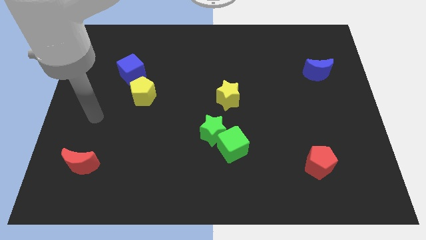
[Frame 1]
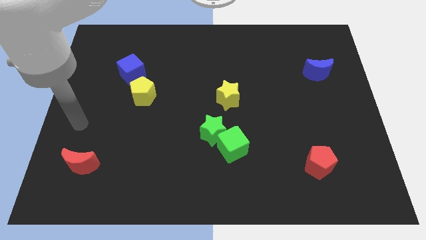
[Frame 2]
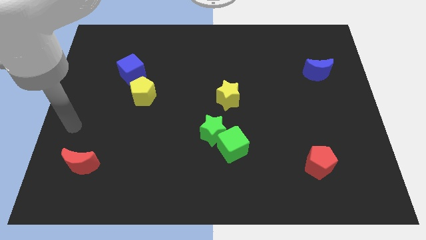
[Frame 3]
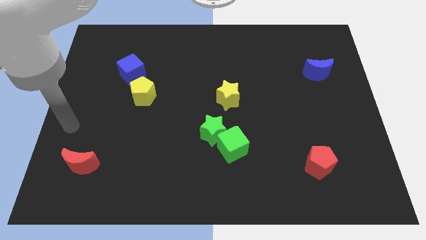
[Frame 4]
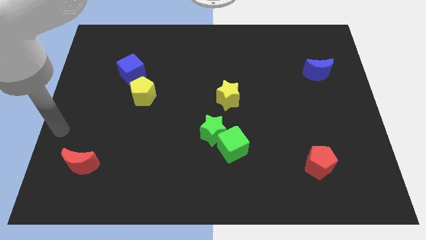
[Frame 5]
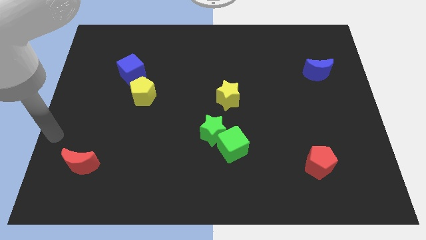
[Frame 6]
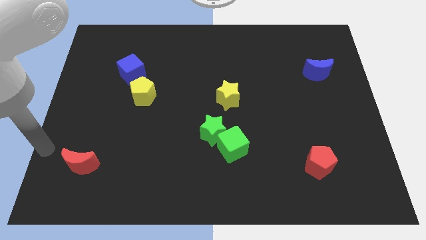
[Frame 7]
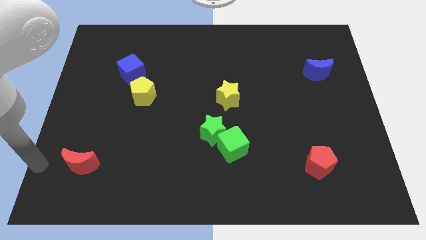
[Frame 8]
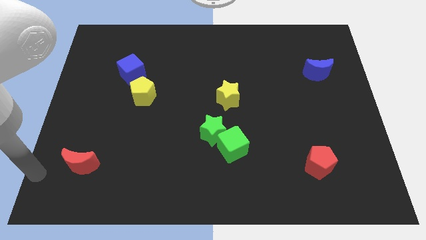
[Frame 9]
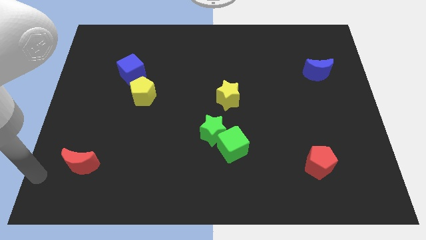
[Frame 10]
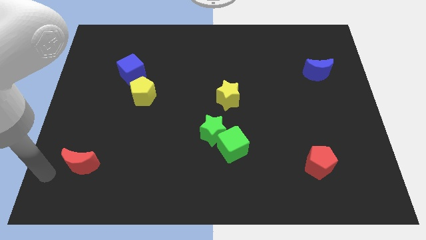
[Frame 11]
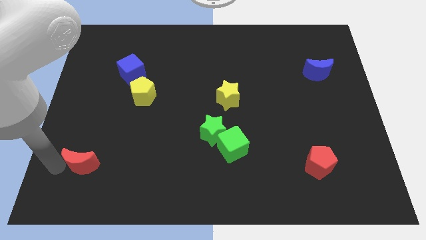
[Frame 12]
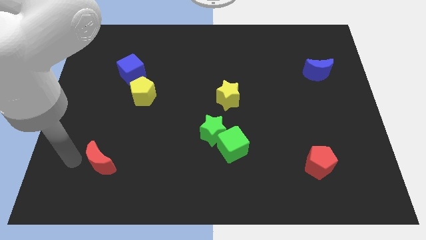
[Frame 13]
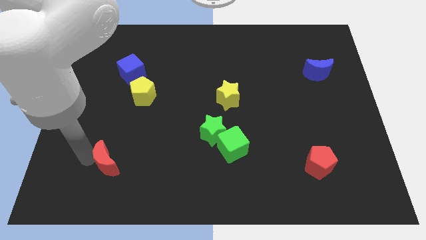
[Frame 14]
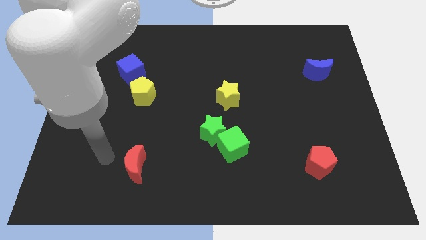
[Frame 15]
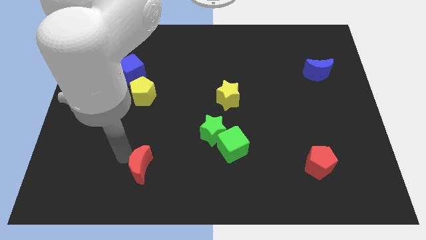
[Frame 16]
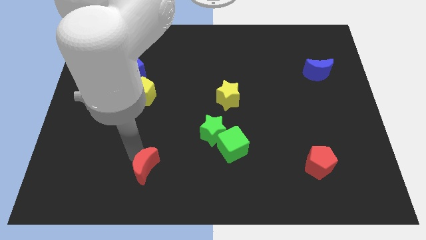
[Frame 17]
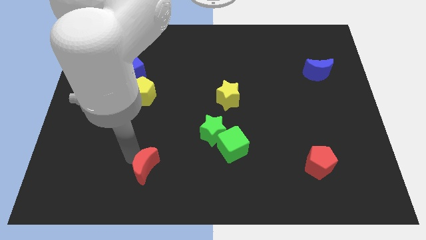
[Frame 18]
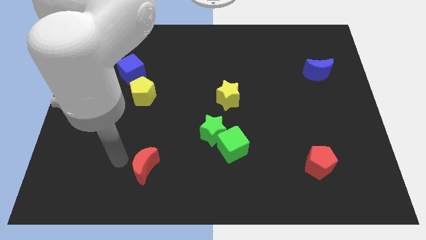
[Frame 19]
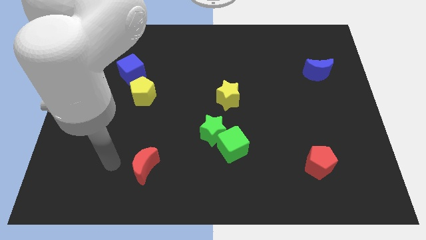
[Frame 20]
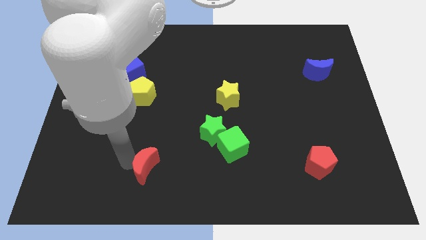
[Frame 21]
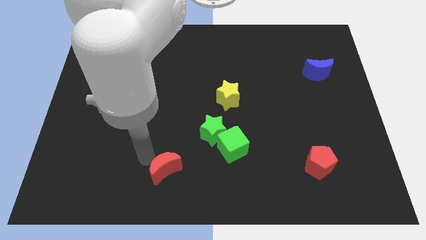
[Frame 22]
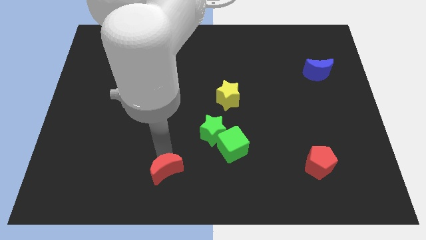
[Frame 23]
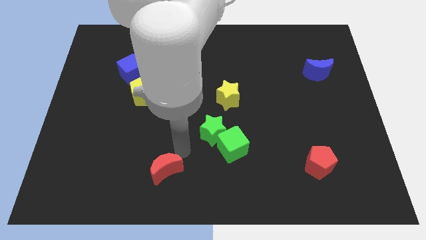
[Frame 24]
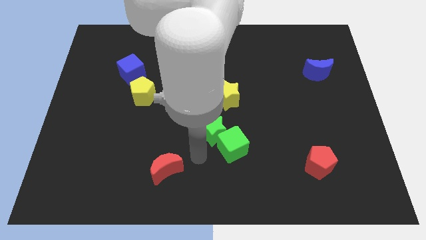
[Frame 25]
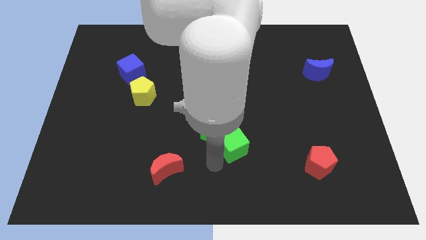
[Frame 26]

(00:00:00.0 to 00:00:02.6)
move your hand parallel to the left of the green star

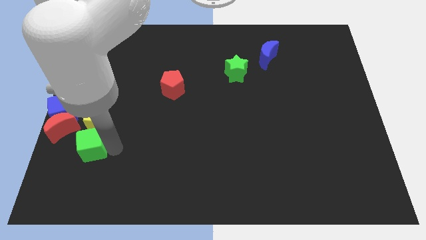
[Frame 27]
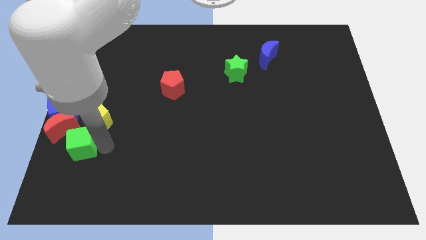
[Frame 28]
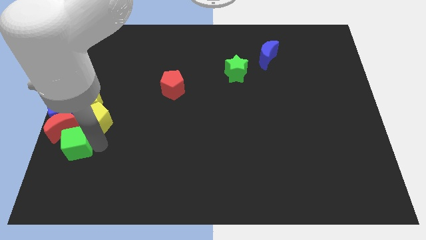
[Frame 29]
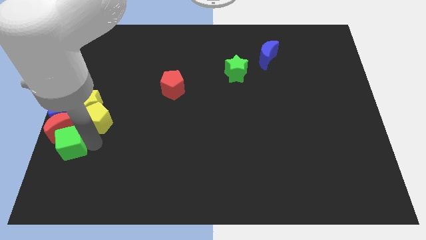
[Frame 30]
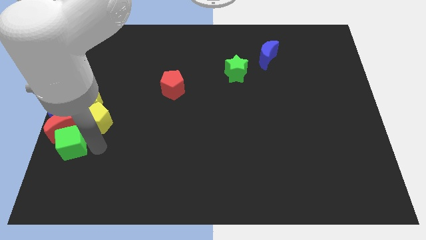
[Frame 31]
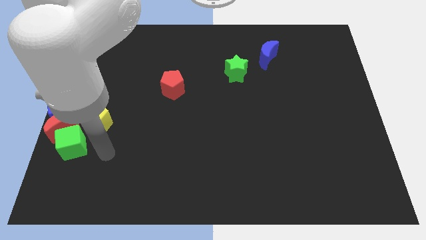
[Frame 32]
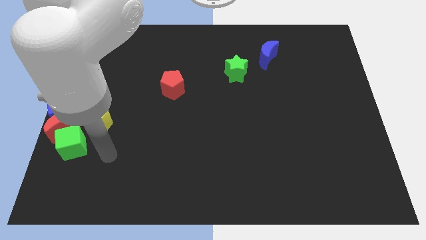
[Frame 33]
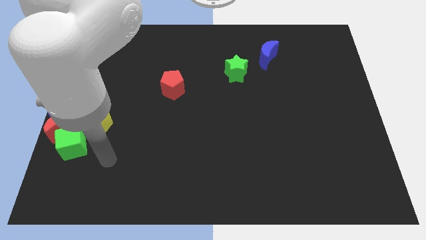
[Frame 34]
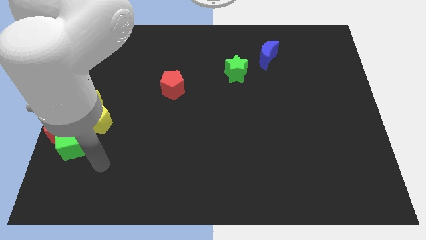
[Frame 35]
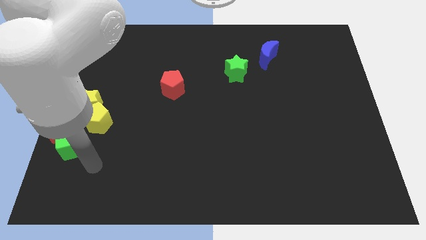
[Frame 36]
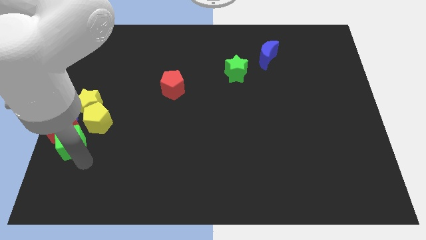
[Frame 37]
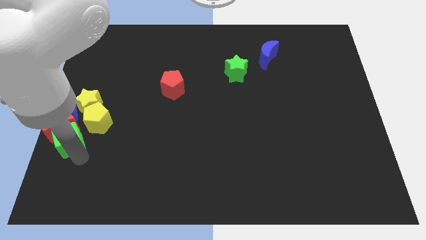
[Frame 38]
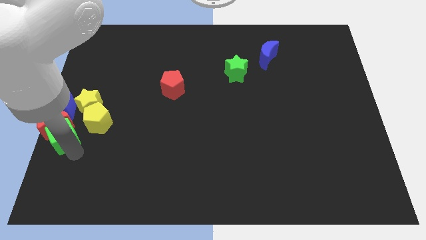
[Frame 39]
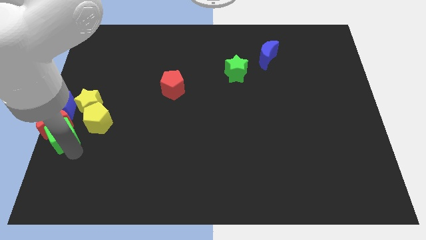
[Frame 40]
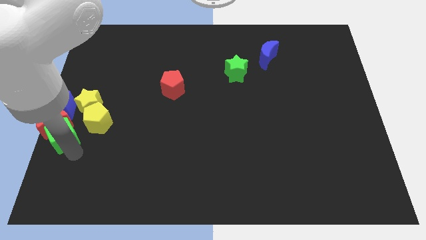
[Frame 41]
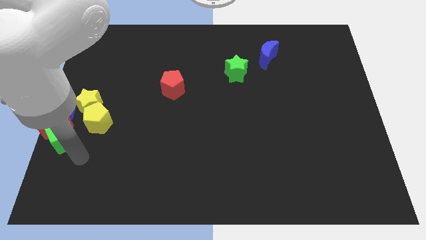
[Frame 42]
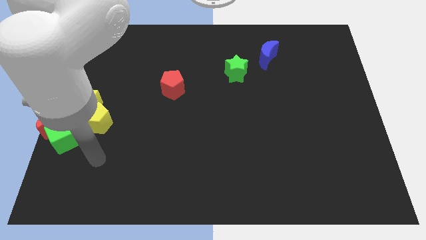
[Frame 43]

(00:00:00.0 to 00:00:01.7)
push the green cube into the red crescent

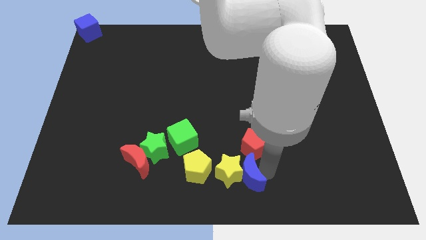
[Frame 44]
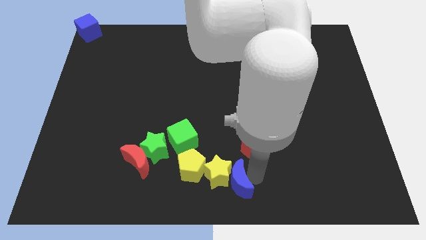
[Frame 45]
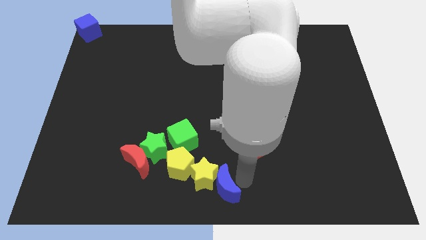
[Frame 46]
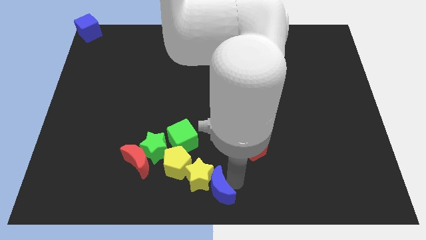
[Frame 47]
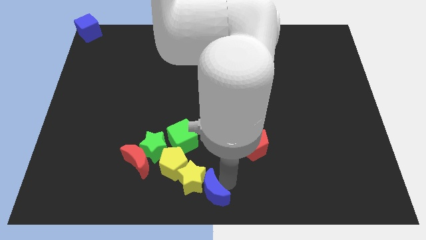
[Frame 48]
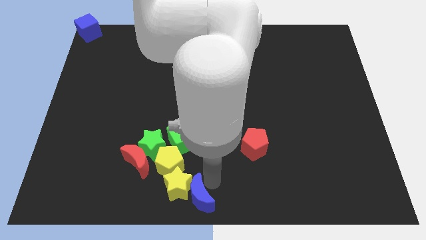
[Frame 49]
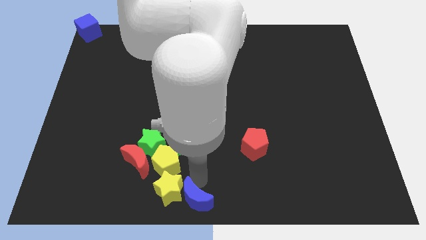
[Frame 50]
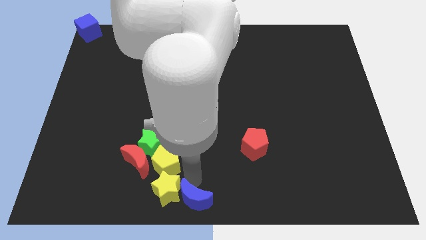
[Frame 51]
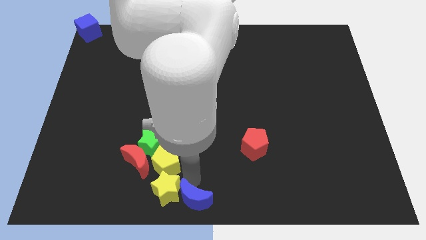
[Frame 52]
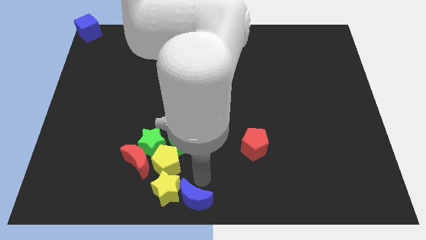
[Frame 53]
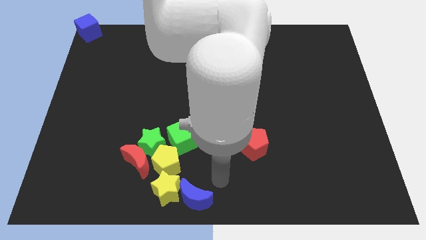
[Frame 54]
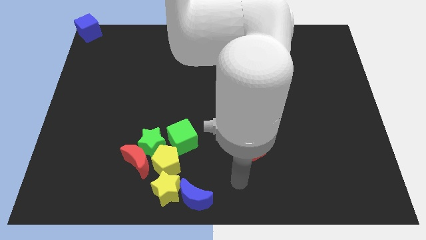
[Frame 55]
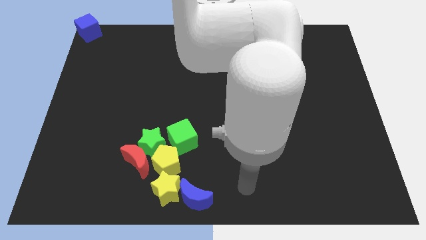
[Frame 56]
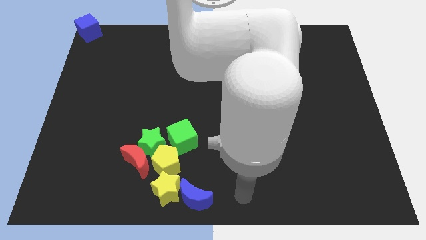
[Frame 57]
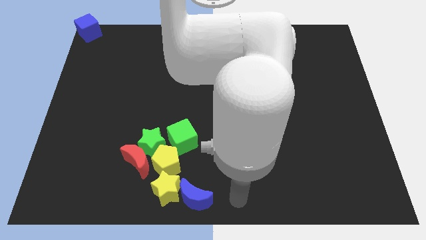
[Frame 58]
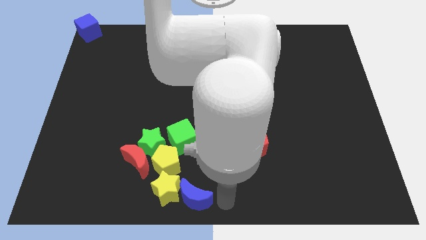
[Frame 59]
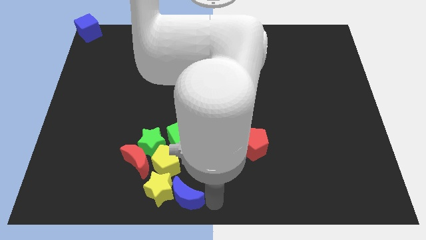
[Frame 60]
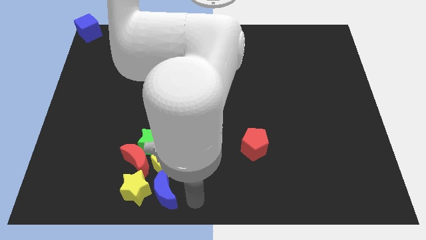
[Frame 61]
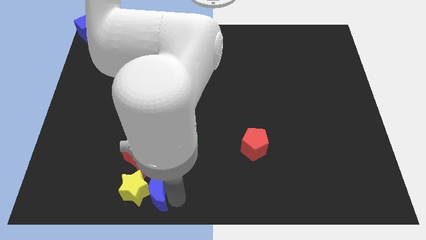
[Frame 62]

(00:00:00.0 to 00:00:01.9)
push a group of blocks to the left side of the board

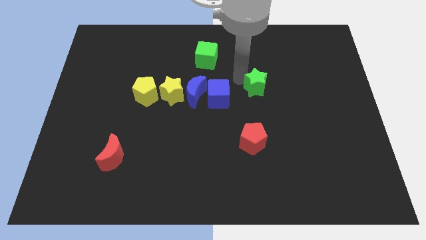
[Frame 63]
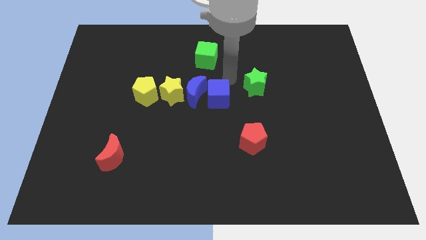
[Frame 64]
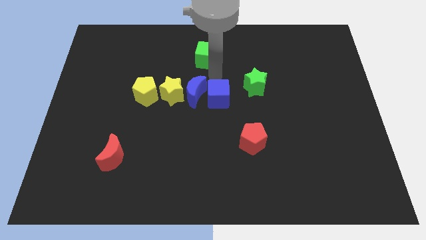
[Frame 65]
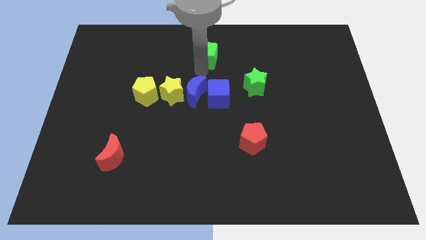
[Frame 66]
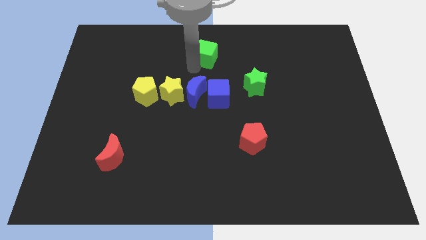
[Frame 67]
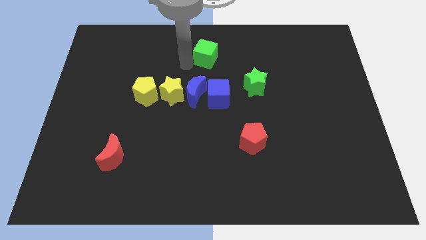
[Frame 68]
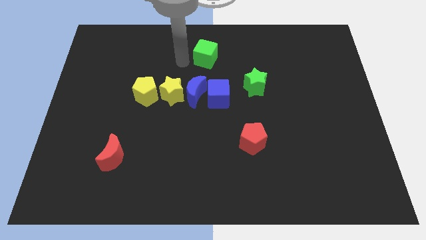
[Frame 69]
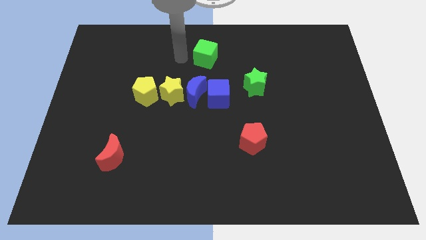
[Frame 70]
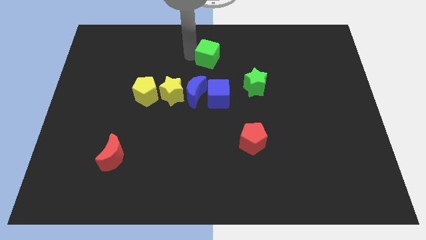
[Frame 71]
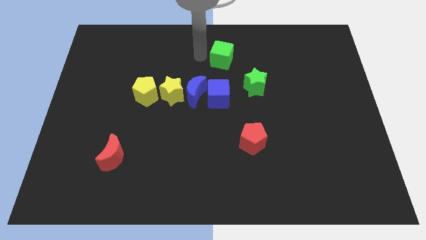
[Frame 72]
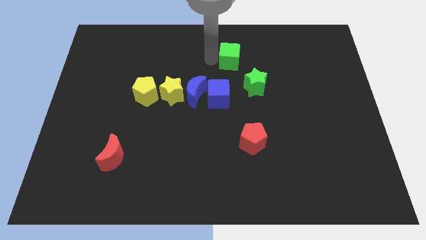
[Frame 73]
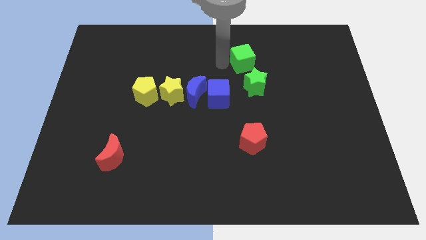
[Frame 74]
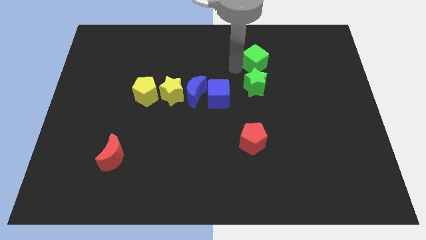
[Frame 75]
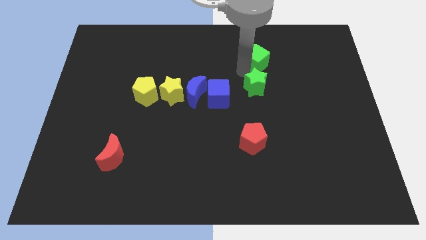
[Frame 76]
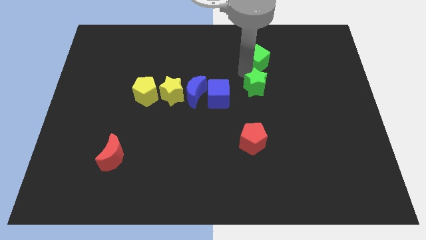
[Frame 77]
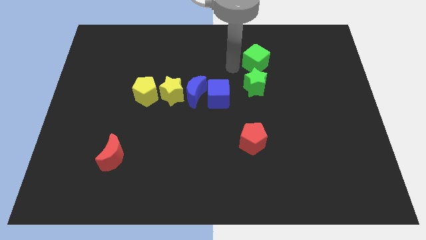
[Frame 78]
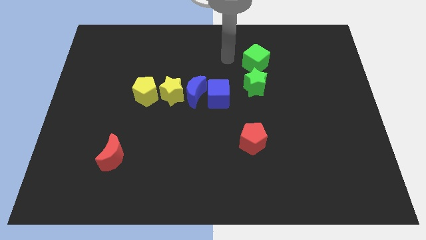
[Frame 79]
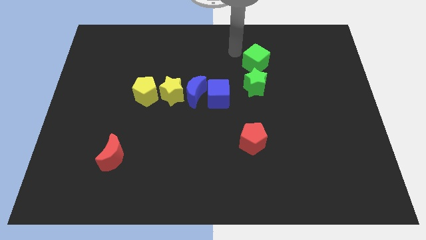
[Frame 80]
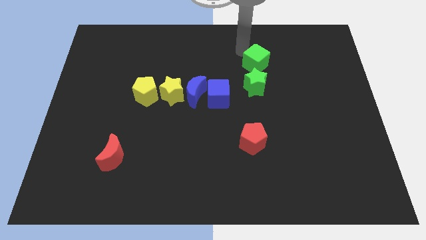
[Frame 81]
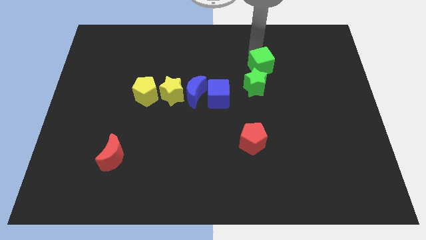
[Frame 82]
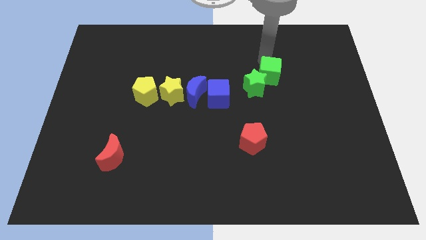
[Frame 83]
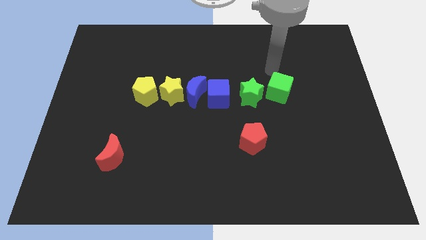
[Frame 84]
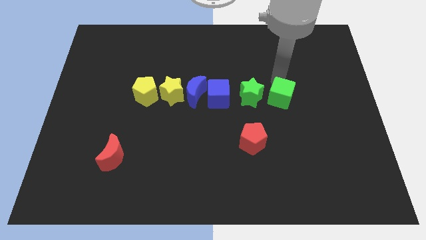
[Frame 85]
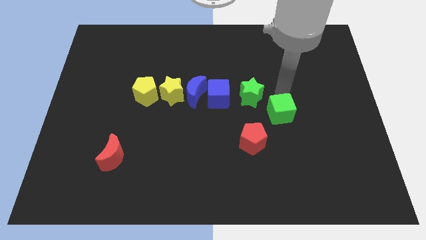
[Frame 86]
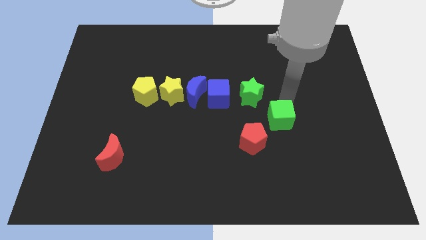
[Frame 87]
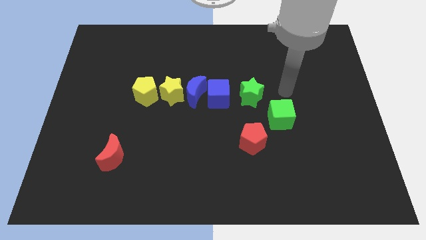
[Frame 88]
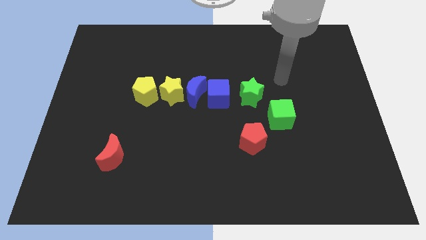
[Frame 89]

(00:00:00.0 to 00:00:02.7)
place the green cube to the right top of the red pentagon

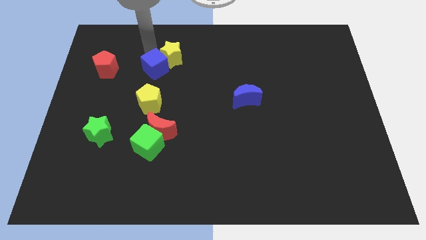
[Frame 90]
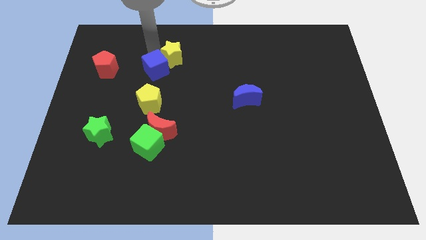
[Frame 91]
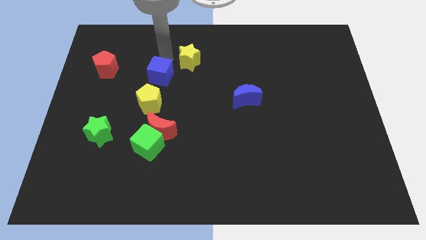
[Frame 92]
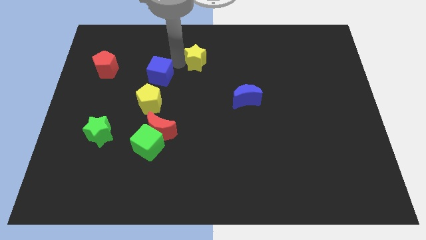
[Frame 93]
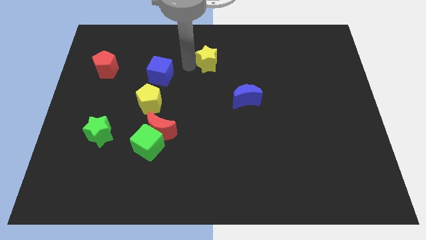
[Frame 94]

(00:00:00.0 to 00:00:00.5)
separate the blue cube and yellow star
